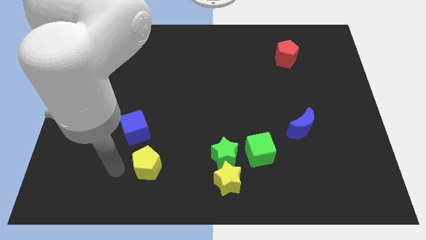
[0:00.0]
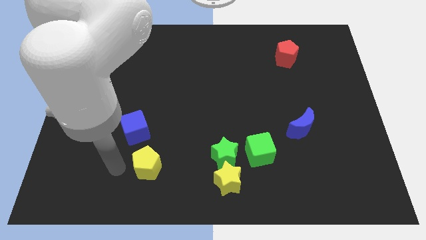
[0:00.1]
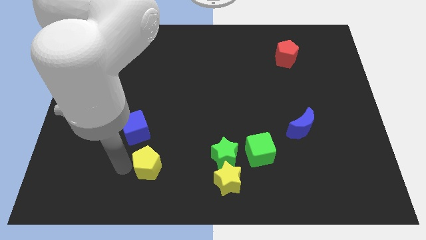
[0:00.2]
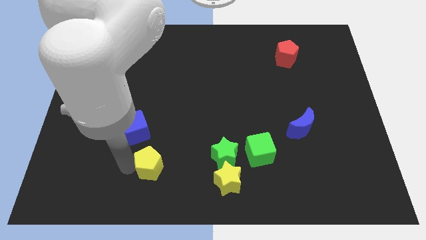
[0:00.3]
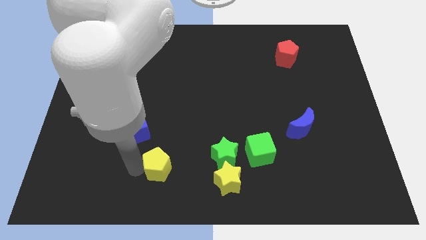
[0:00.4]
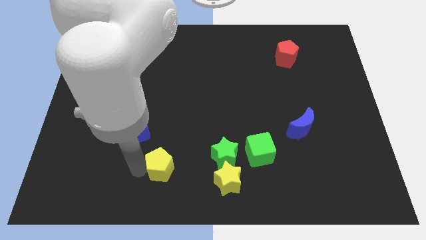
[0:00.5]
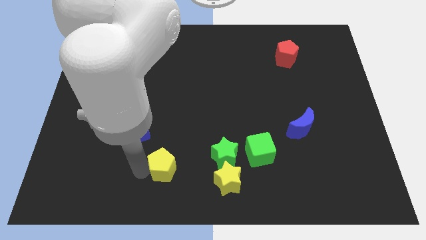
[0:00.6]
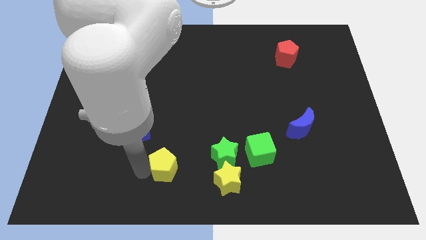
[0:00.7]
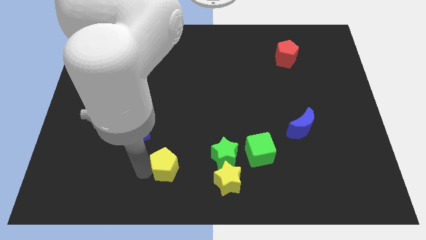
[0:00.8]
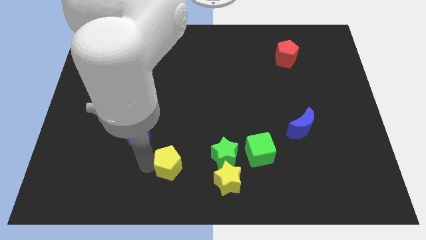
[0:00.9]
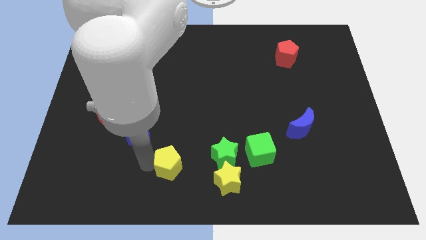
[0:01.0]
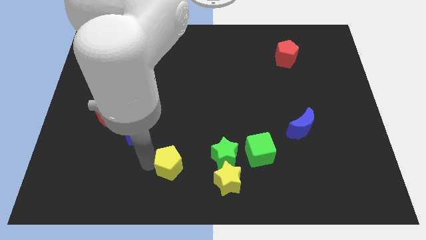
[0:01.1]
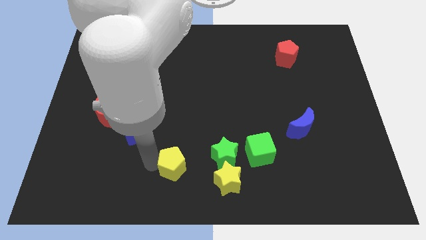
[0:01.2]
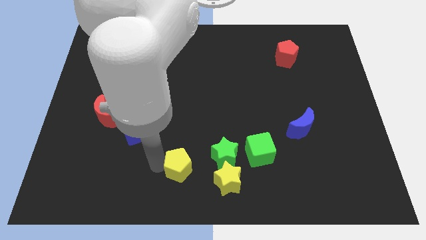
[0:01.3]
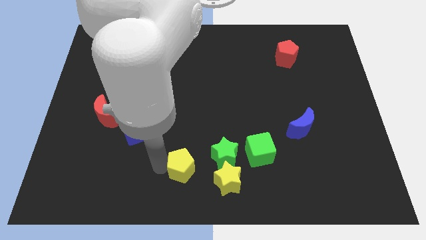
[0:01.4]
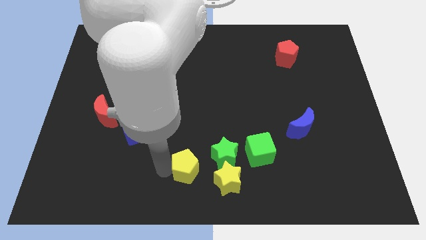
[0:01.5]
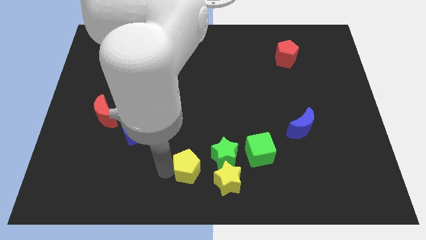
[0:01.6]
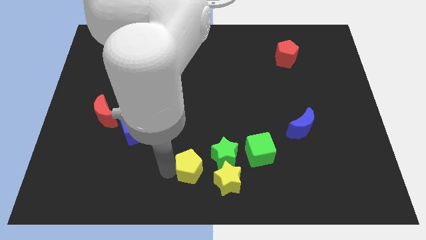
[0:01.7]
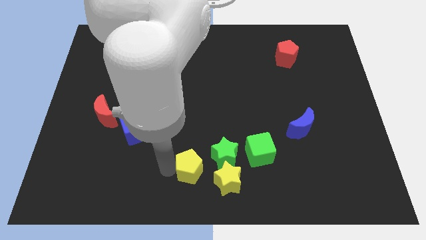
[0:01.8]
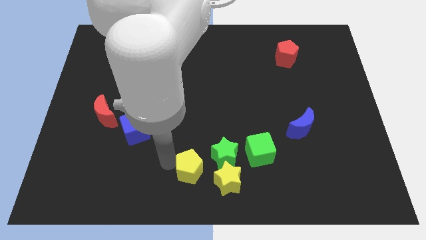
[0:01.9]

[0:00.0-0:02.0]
move the yellow pentagon towards the group of stars

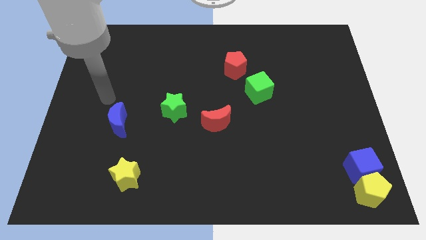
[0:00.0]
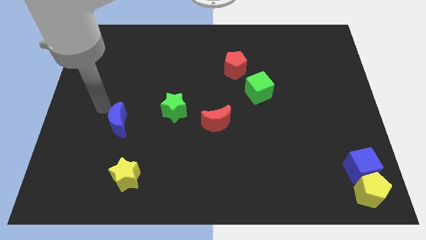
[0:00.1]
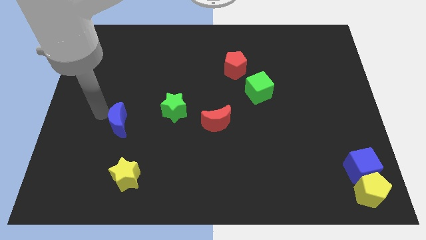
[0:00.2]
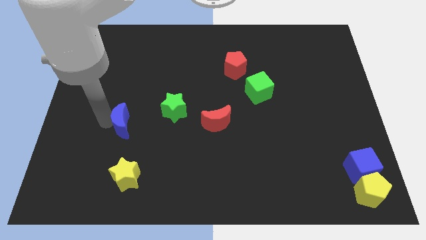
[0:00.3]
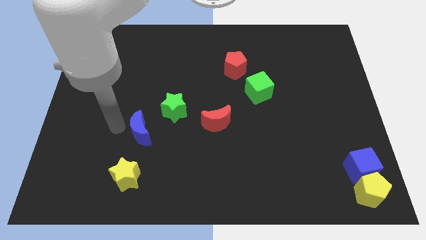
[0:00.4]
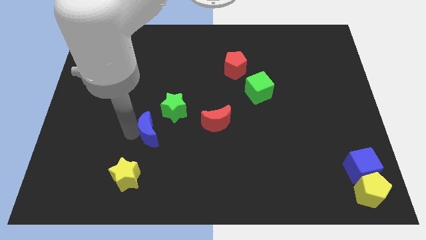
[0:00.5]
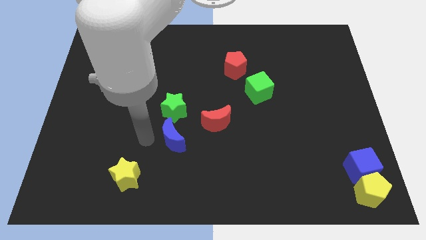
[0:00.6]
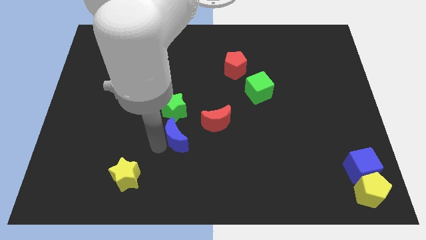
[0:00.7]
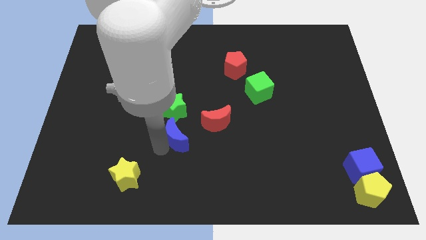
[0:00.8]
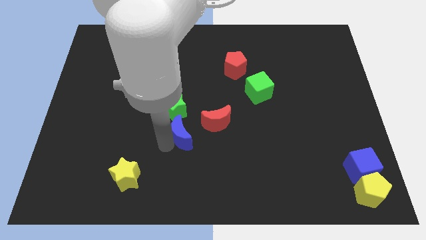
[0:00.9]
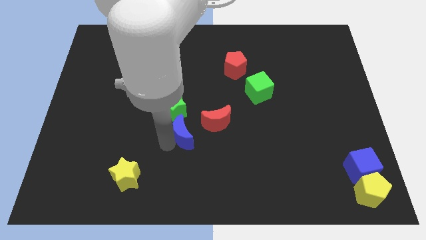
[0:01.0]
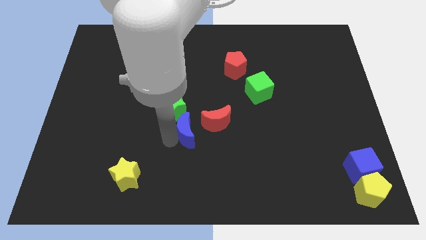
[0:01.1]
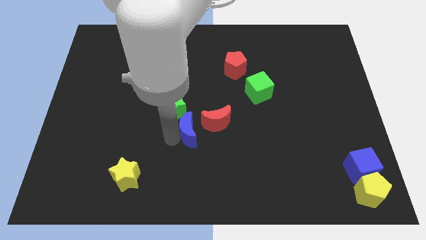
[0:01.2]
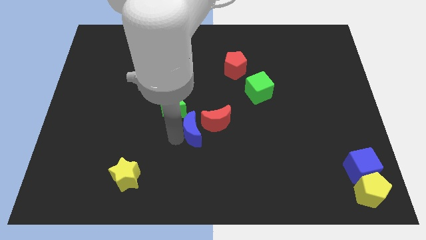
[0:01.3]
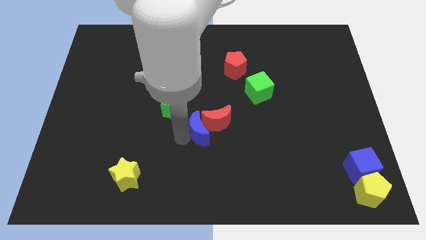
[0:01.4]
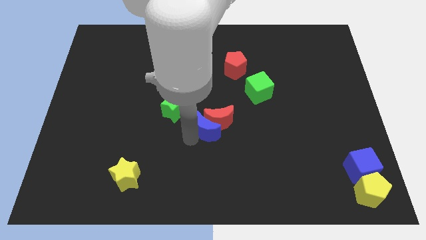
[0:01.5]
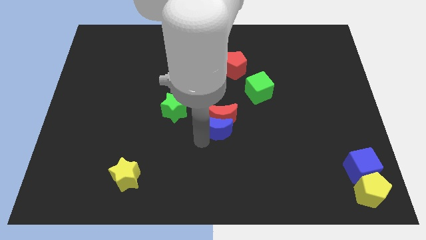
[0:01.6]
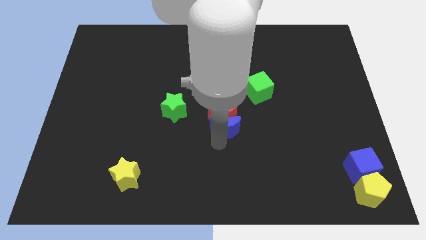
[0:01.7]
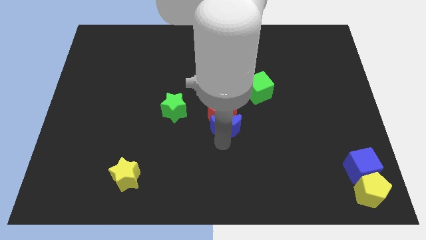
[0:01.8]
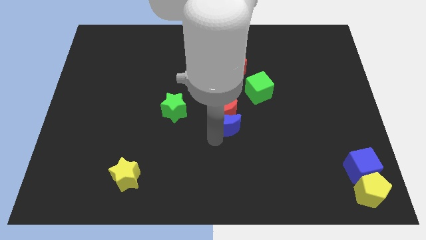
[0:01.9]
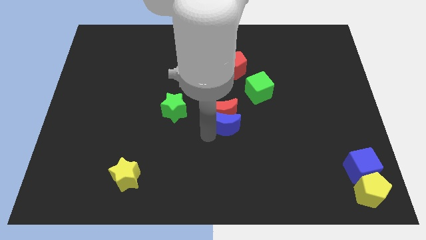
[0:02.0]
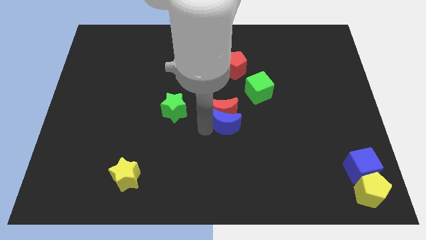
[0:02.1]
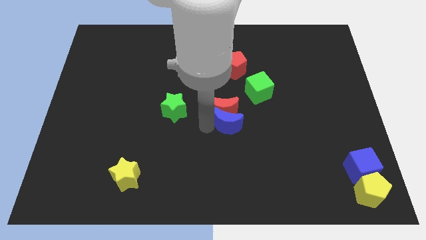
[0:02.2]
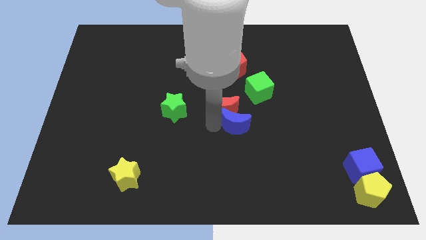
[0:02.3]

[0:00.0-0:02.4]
move the blue crescent into the red crescent

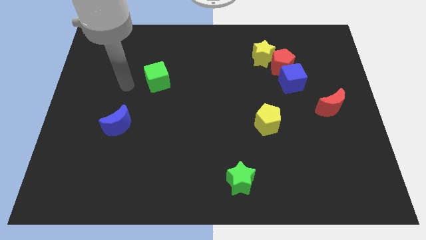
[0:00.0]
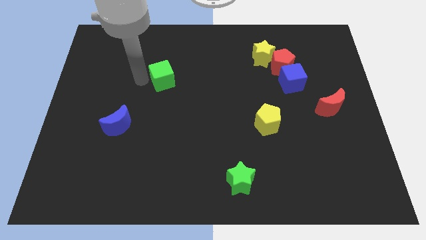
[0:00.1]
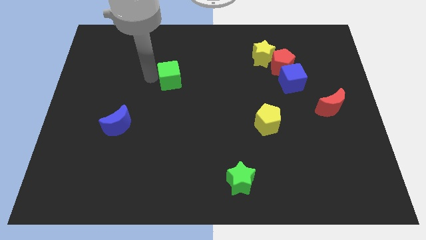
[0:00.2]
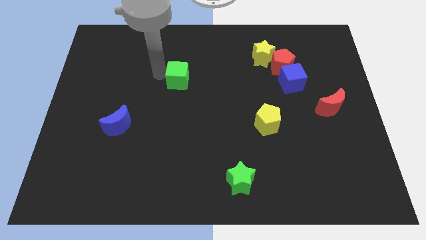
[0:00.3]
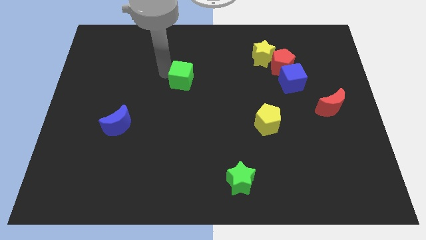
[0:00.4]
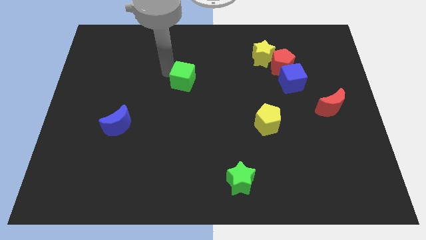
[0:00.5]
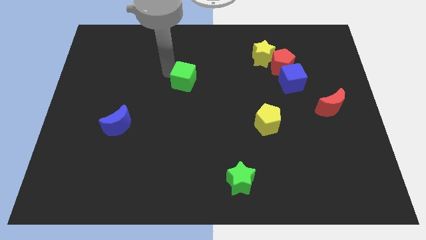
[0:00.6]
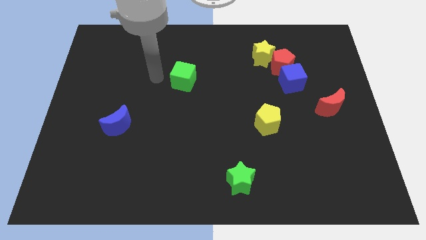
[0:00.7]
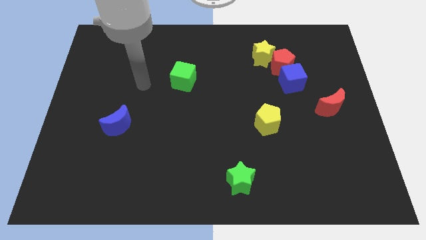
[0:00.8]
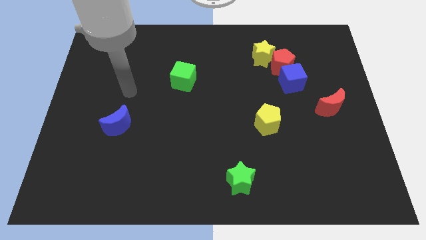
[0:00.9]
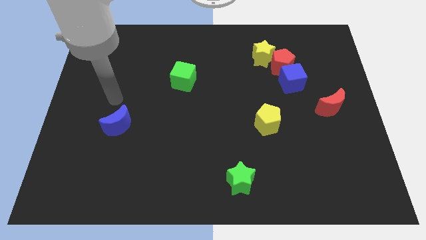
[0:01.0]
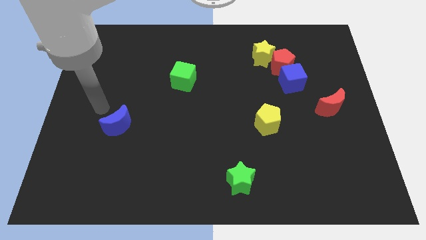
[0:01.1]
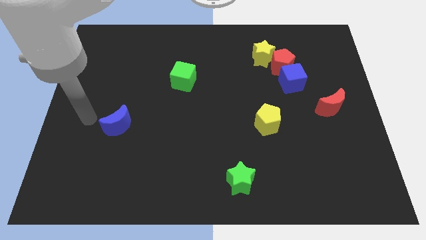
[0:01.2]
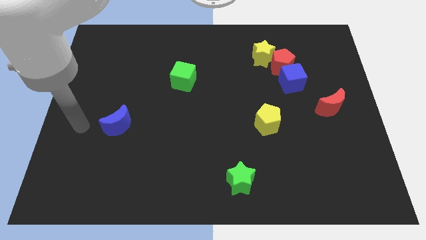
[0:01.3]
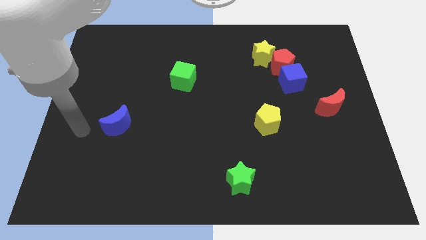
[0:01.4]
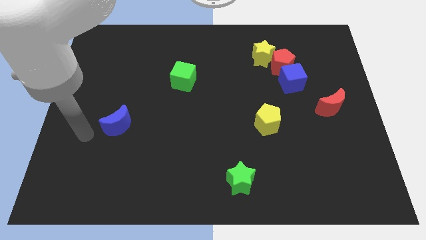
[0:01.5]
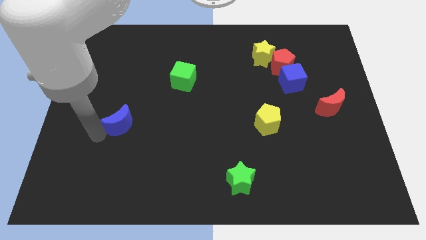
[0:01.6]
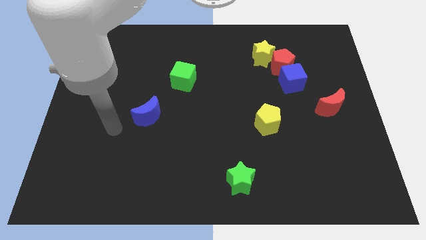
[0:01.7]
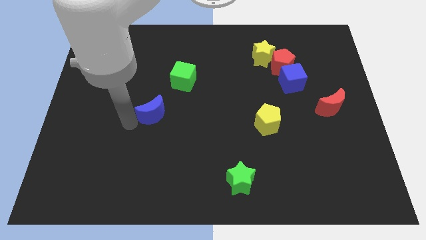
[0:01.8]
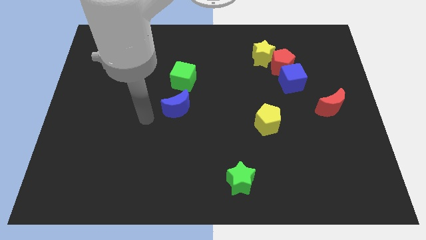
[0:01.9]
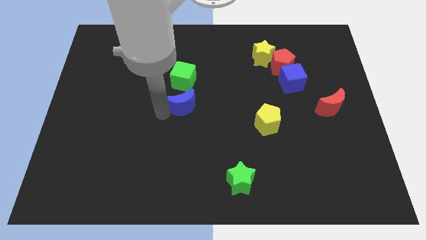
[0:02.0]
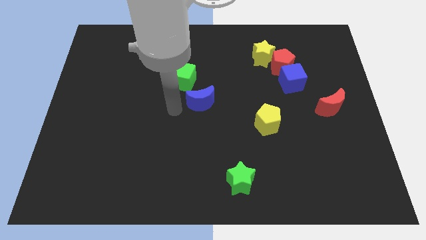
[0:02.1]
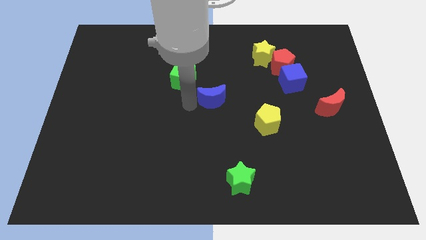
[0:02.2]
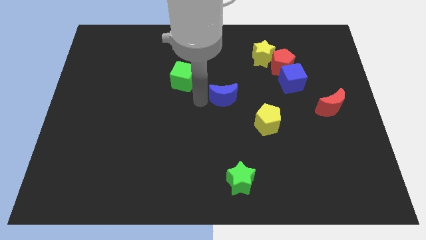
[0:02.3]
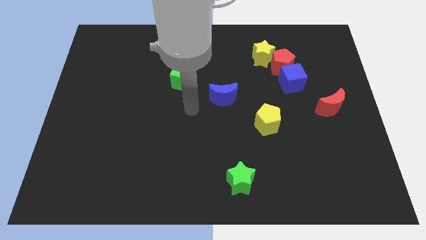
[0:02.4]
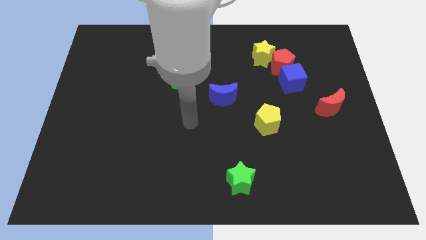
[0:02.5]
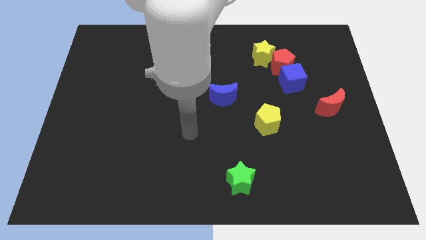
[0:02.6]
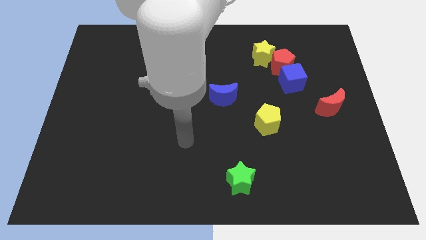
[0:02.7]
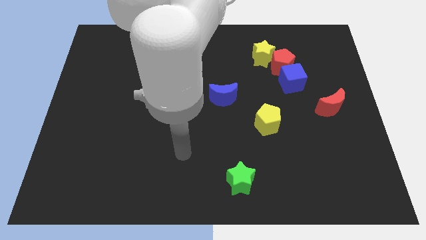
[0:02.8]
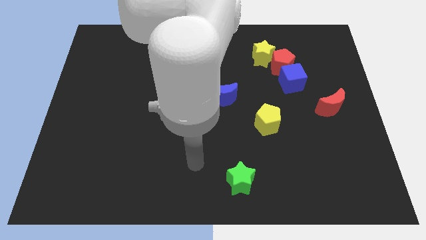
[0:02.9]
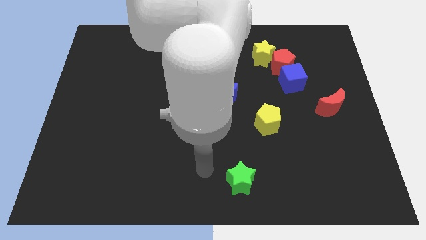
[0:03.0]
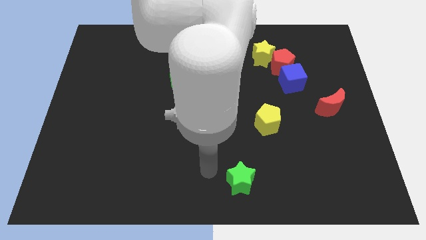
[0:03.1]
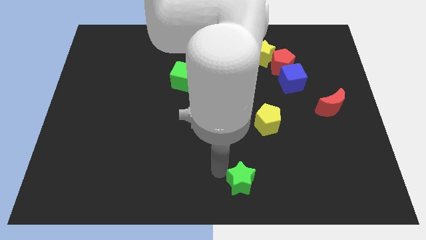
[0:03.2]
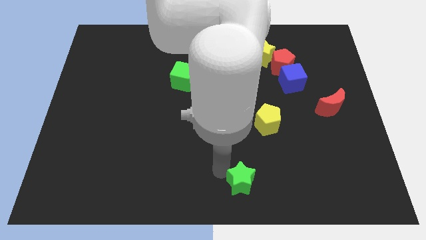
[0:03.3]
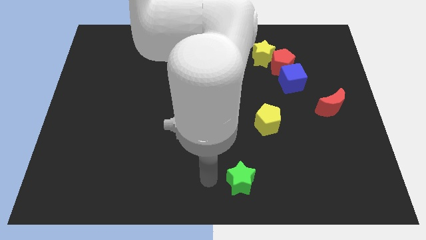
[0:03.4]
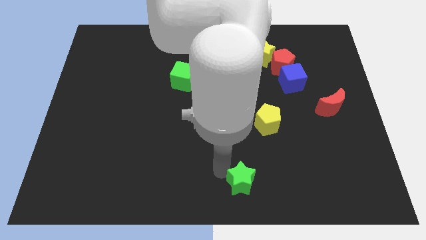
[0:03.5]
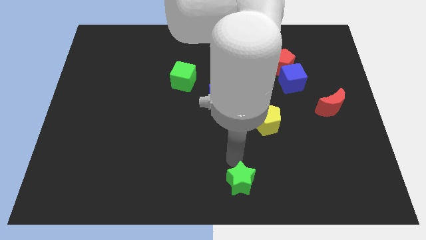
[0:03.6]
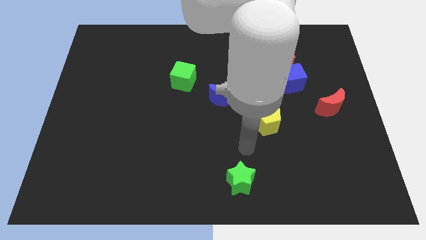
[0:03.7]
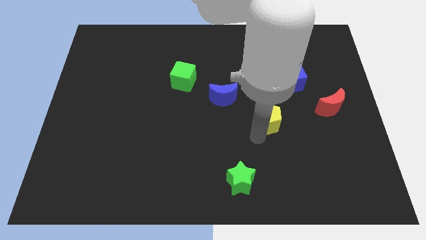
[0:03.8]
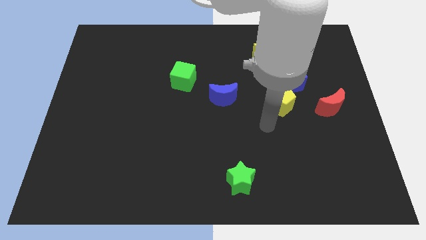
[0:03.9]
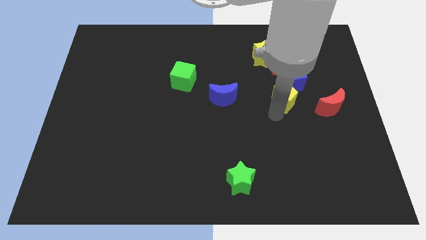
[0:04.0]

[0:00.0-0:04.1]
make a line out of green cube blue moon and yellow pentagon

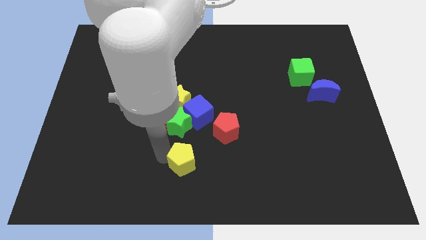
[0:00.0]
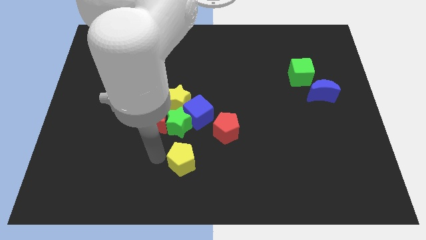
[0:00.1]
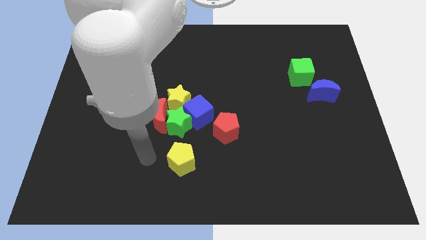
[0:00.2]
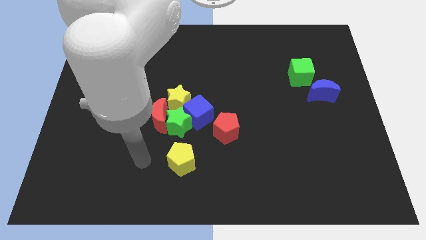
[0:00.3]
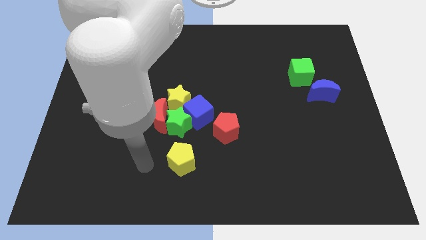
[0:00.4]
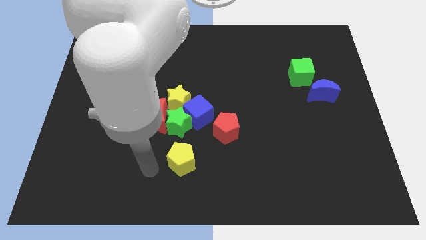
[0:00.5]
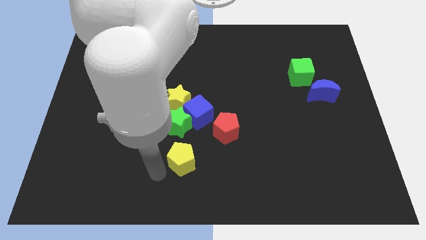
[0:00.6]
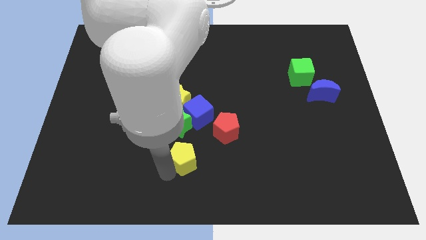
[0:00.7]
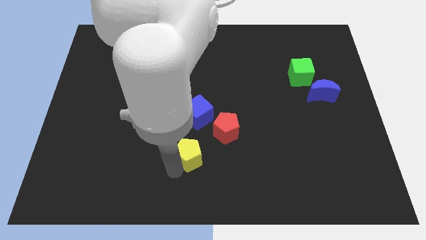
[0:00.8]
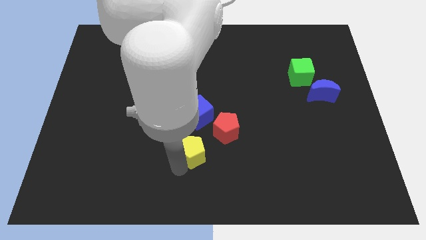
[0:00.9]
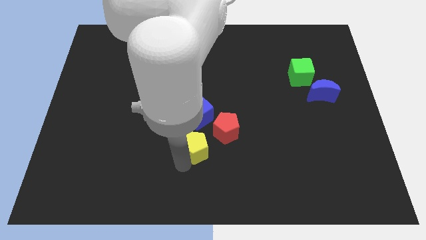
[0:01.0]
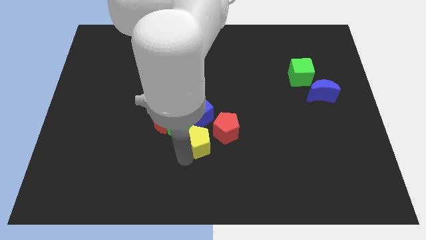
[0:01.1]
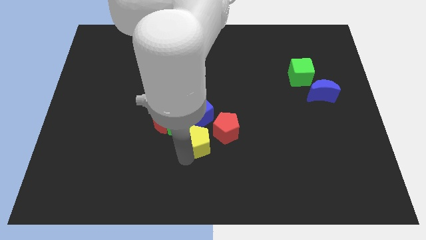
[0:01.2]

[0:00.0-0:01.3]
push the yellow pentagon slightly up
